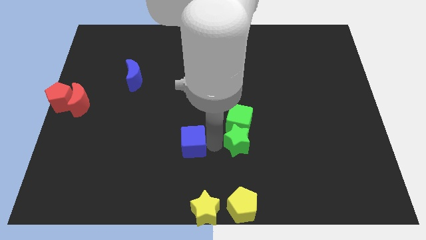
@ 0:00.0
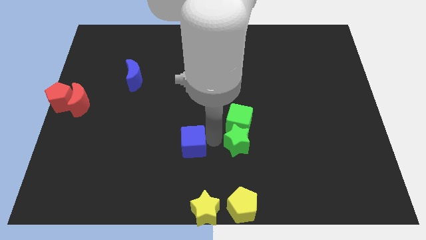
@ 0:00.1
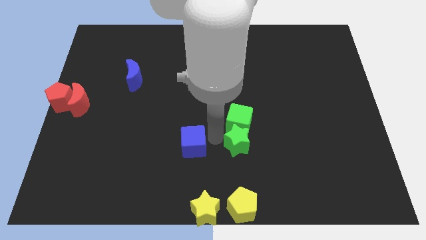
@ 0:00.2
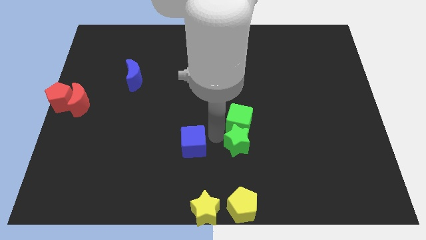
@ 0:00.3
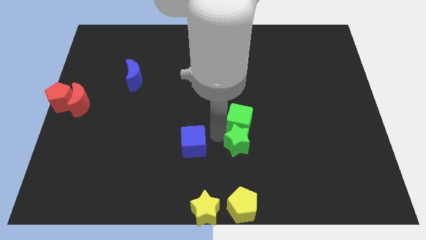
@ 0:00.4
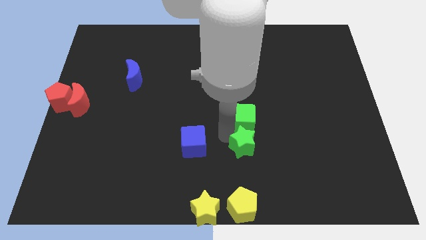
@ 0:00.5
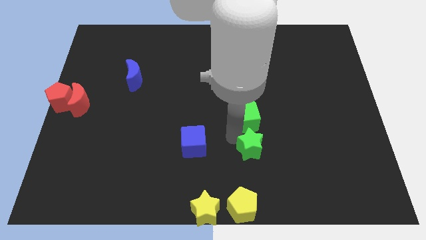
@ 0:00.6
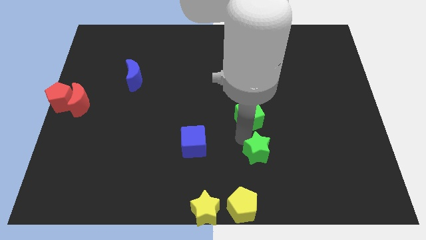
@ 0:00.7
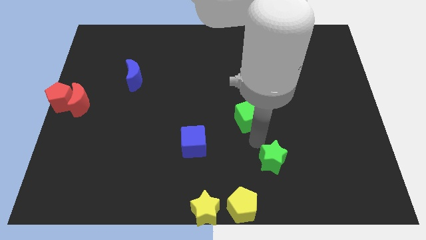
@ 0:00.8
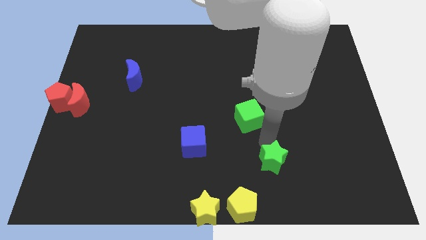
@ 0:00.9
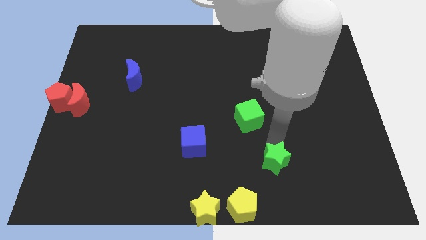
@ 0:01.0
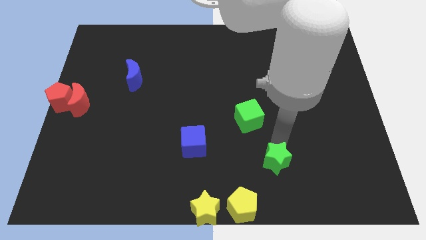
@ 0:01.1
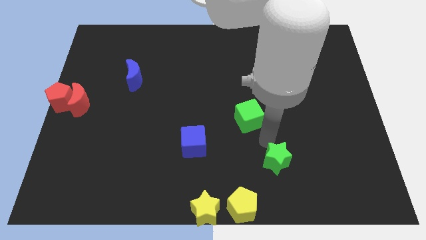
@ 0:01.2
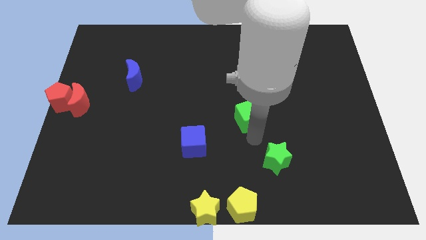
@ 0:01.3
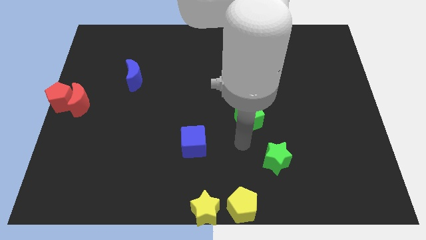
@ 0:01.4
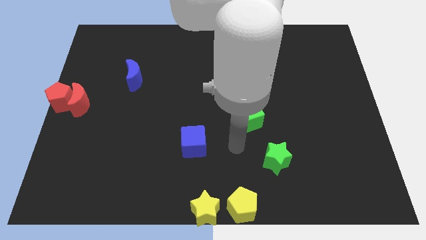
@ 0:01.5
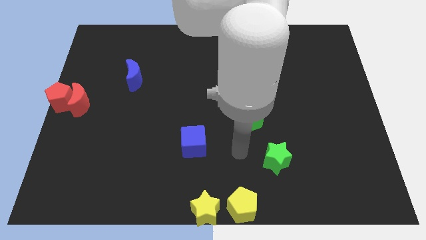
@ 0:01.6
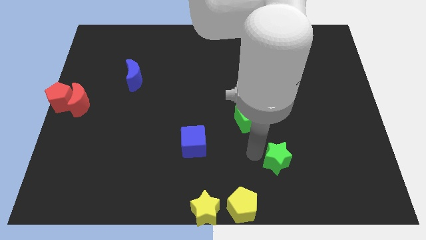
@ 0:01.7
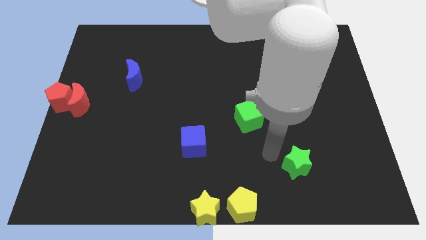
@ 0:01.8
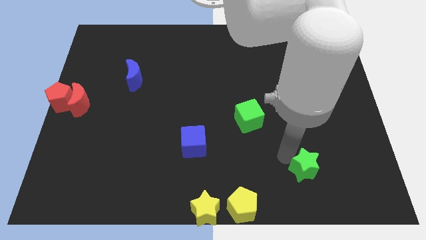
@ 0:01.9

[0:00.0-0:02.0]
separate both the green blocks from each other

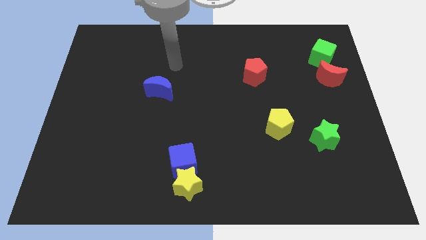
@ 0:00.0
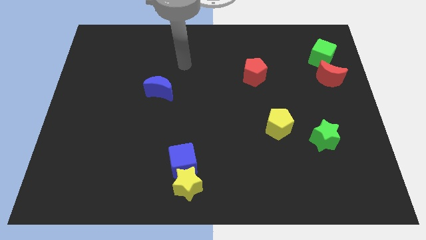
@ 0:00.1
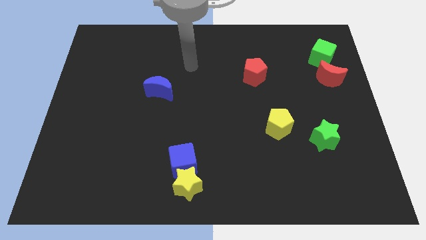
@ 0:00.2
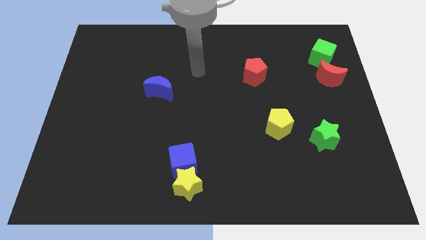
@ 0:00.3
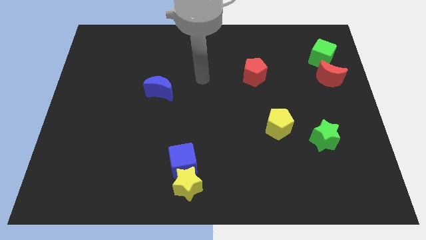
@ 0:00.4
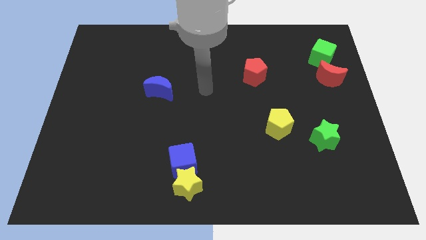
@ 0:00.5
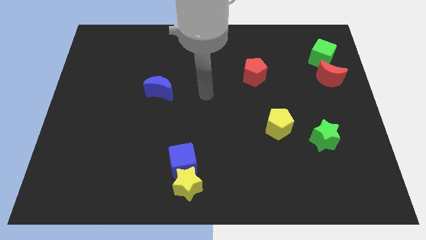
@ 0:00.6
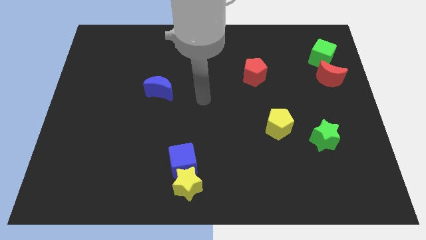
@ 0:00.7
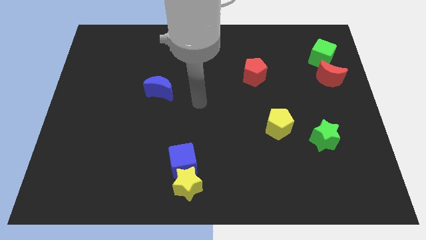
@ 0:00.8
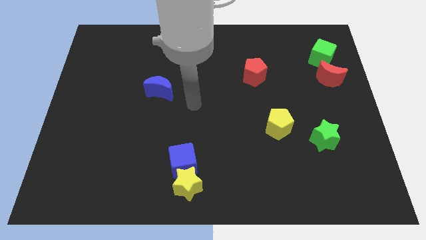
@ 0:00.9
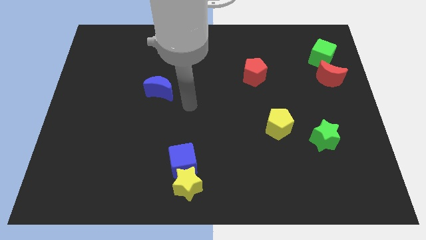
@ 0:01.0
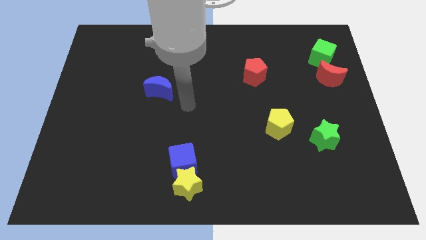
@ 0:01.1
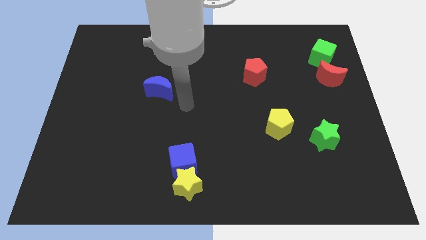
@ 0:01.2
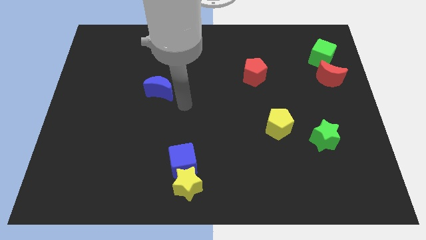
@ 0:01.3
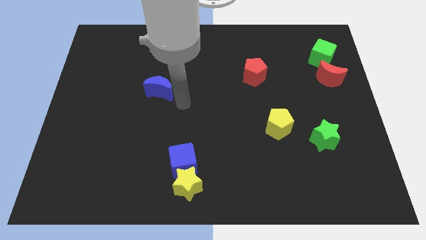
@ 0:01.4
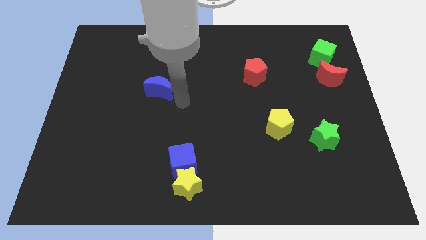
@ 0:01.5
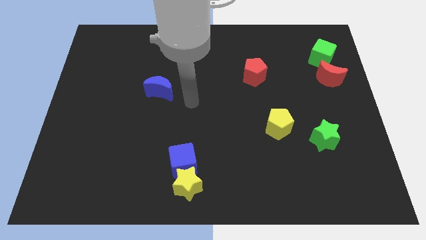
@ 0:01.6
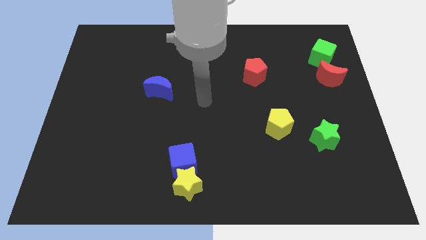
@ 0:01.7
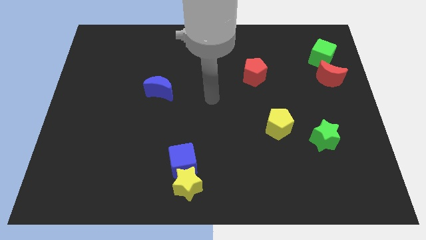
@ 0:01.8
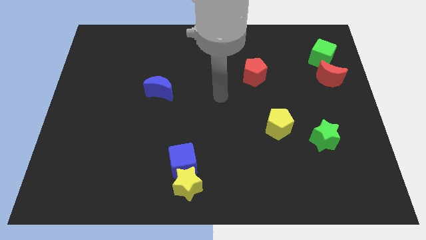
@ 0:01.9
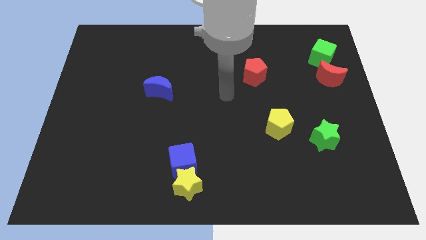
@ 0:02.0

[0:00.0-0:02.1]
move your arm to the center of the board

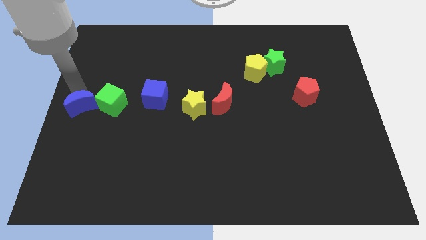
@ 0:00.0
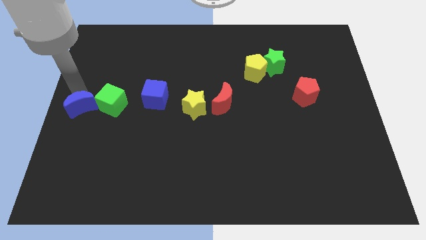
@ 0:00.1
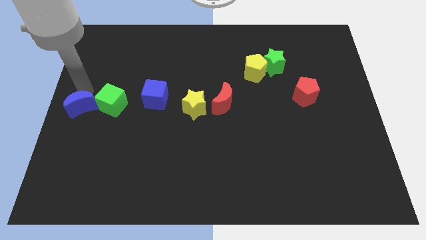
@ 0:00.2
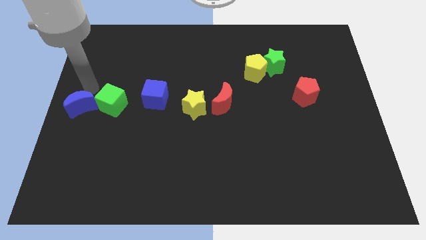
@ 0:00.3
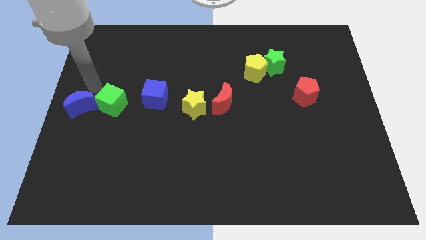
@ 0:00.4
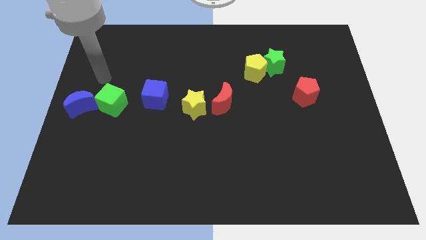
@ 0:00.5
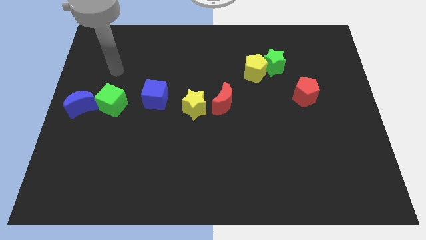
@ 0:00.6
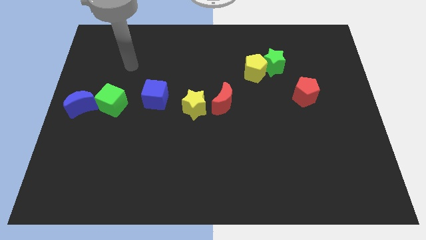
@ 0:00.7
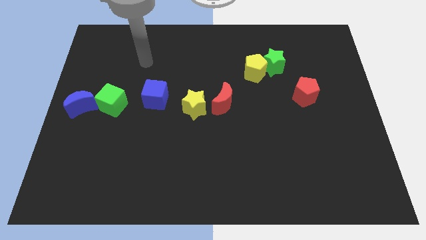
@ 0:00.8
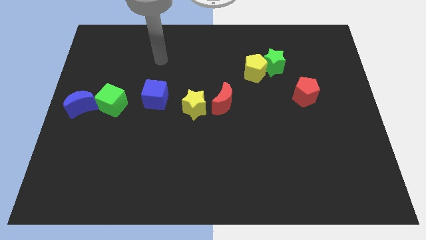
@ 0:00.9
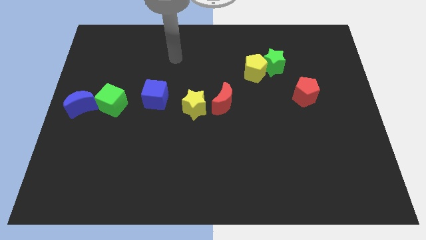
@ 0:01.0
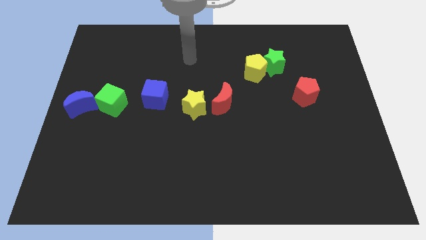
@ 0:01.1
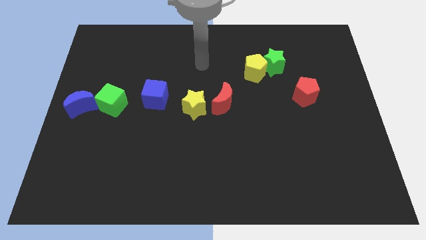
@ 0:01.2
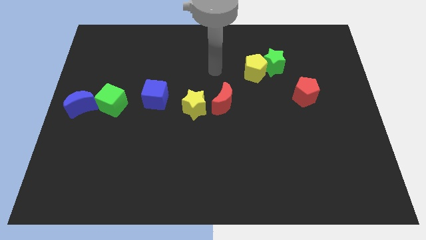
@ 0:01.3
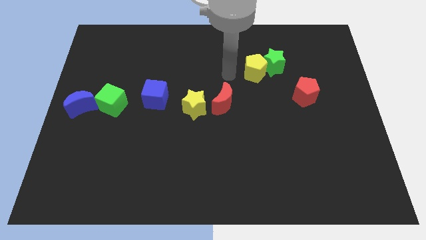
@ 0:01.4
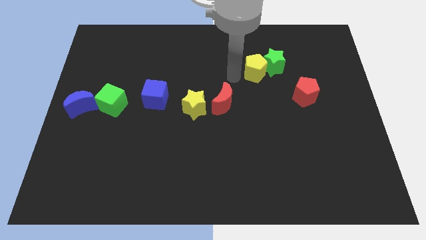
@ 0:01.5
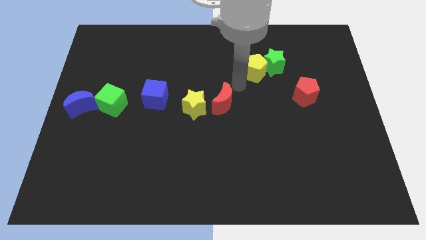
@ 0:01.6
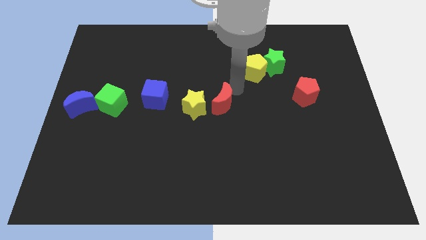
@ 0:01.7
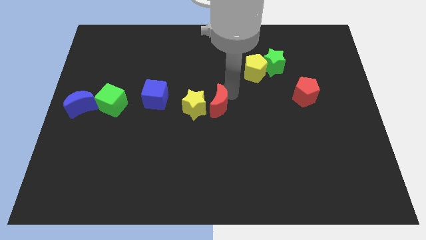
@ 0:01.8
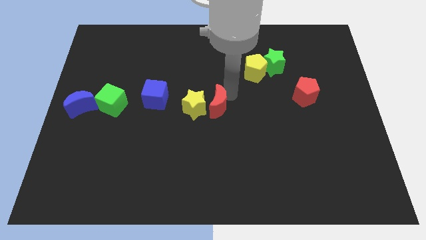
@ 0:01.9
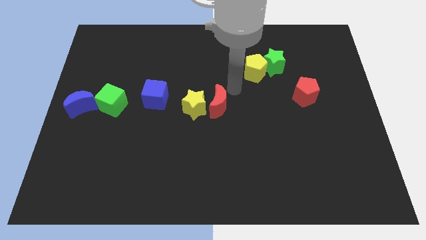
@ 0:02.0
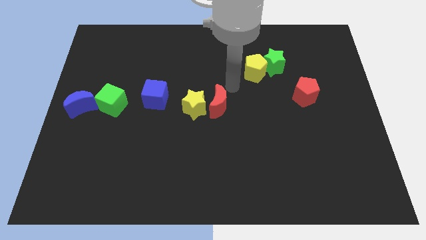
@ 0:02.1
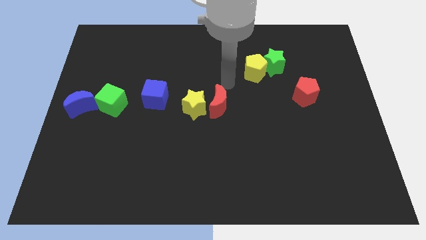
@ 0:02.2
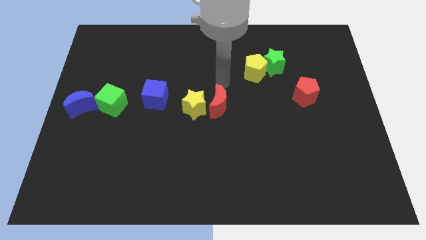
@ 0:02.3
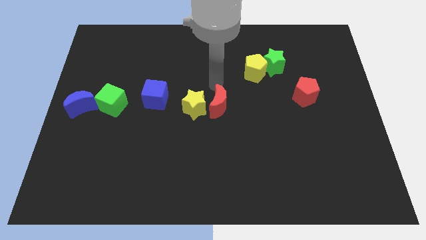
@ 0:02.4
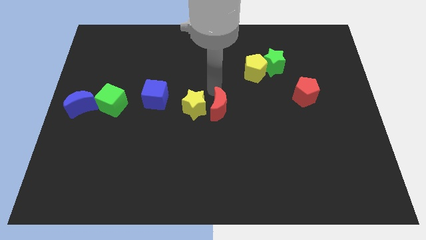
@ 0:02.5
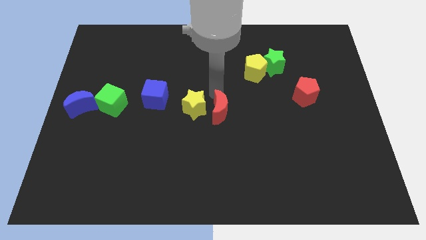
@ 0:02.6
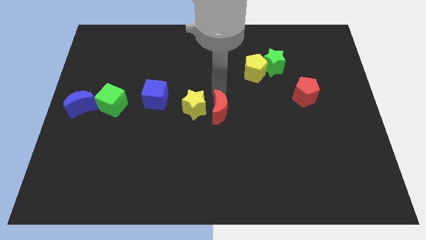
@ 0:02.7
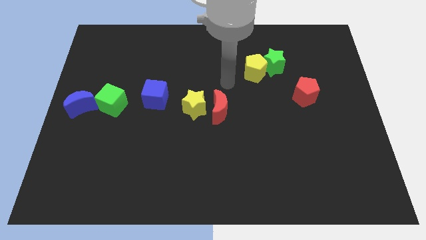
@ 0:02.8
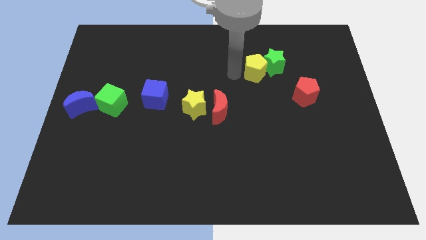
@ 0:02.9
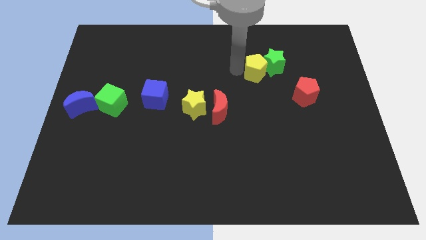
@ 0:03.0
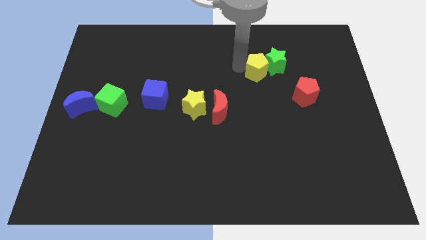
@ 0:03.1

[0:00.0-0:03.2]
push the red crescent slightly to the down

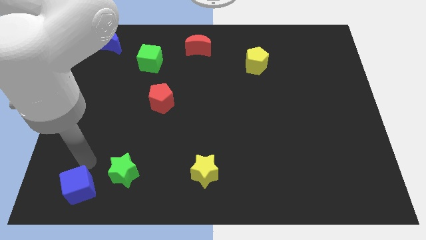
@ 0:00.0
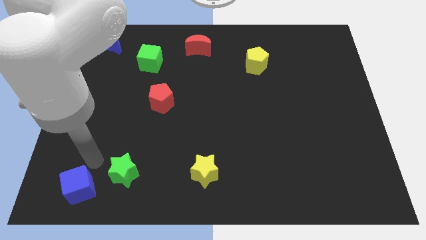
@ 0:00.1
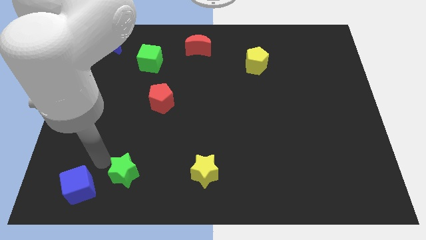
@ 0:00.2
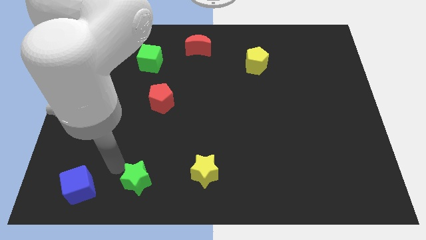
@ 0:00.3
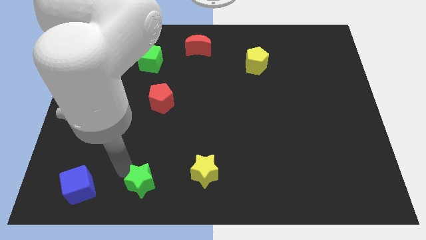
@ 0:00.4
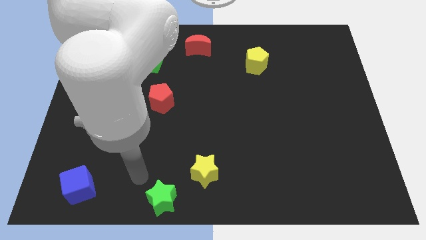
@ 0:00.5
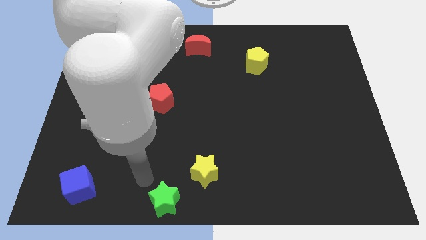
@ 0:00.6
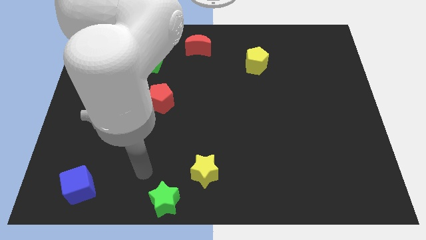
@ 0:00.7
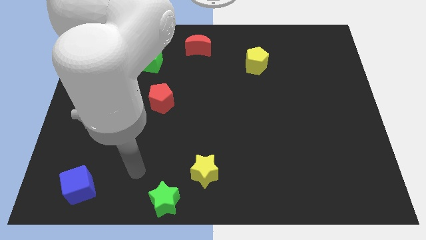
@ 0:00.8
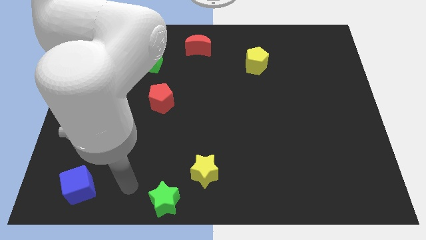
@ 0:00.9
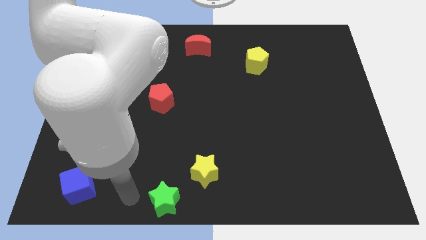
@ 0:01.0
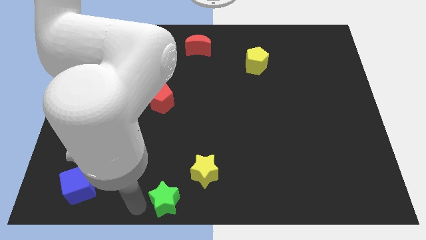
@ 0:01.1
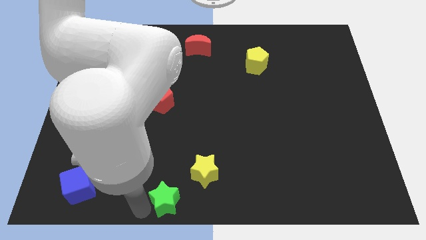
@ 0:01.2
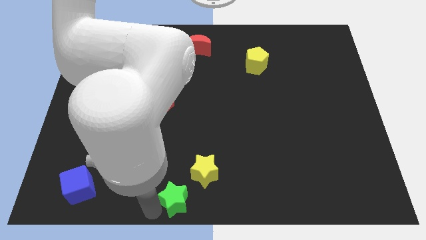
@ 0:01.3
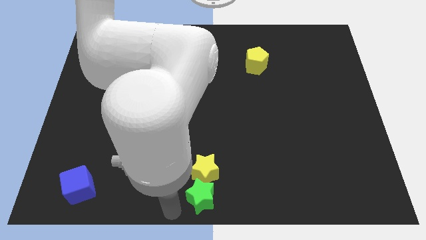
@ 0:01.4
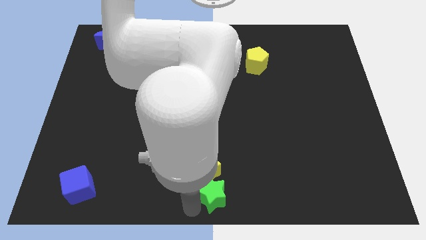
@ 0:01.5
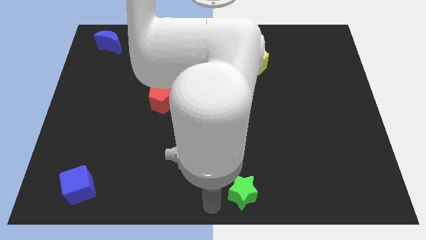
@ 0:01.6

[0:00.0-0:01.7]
push the green star below the yellow star

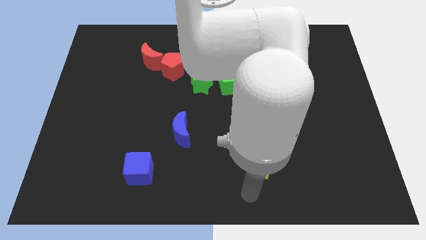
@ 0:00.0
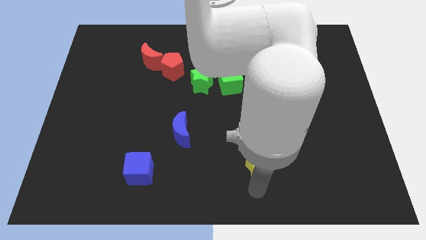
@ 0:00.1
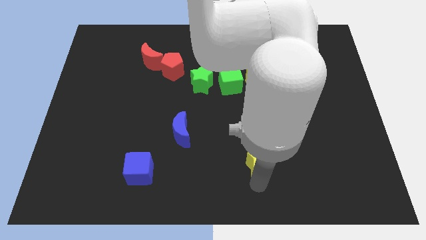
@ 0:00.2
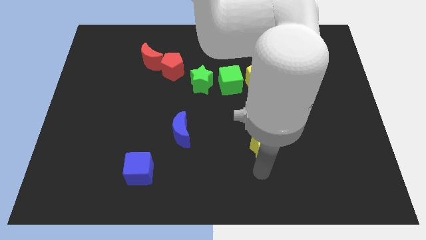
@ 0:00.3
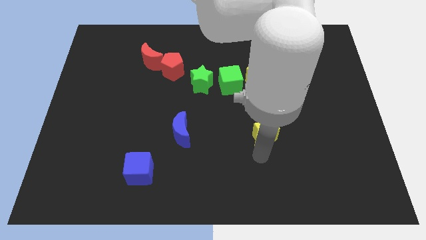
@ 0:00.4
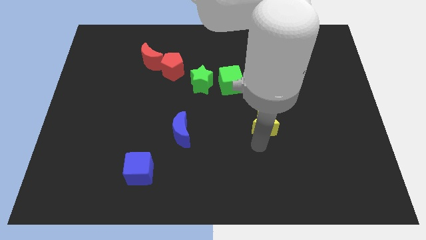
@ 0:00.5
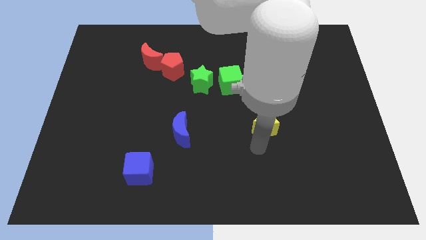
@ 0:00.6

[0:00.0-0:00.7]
place yellow star slightly towards top side
